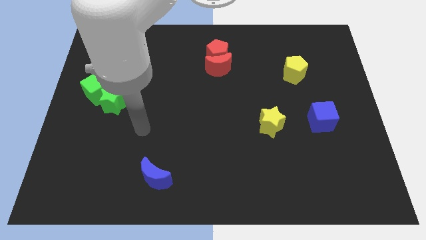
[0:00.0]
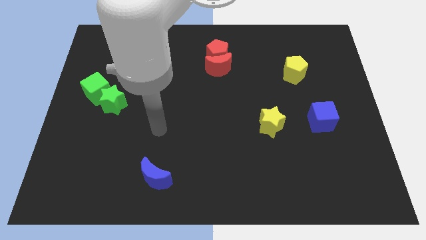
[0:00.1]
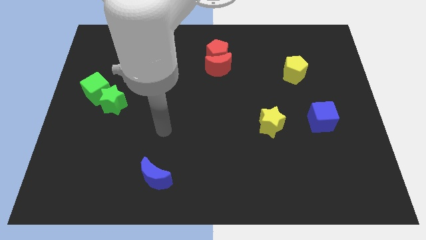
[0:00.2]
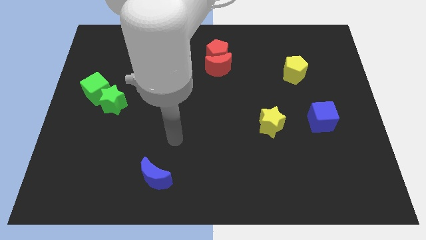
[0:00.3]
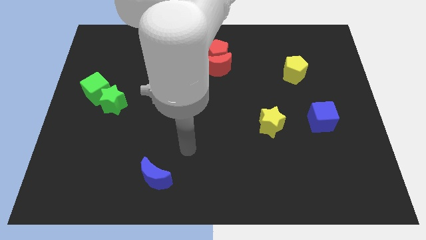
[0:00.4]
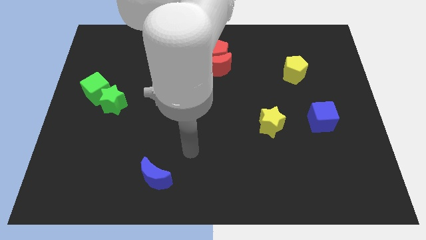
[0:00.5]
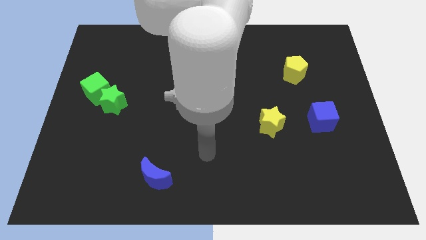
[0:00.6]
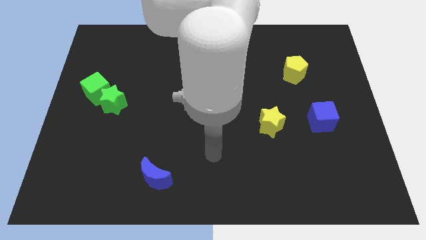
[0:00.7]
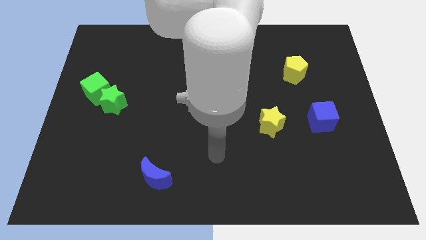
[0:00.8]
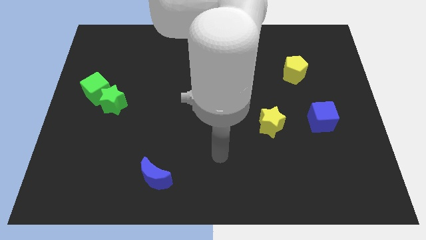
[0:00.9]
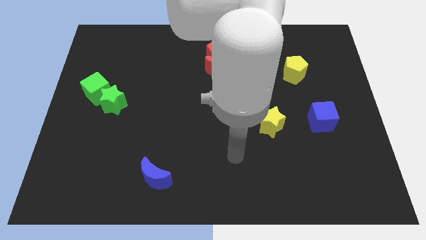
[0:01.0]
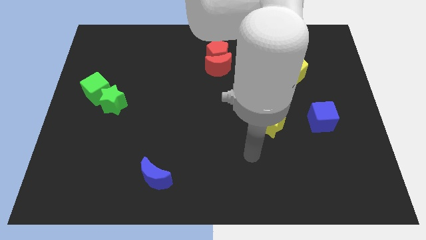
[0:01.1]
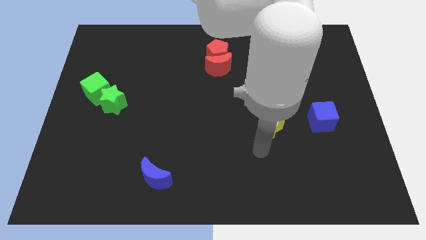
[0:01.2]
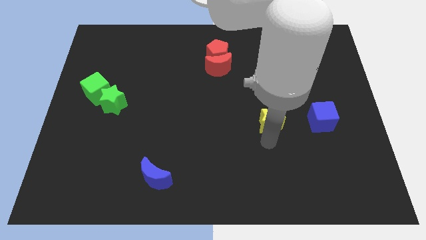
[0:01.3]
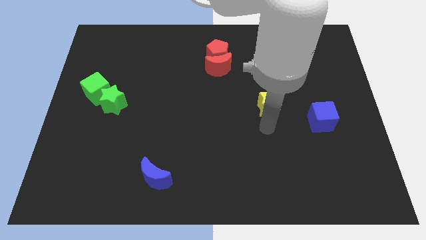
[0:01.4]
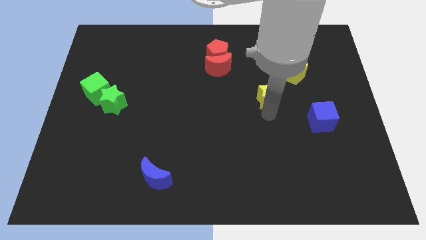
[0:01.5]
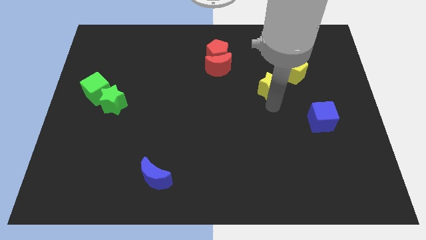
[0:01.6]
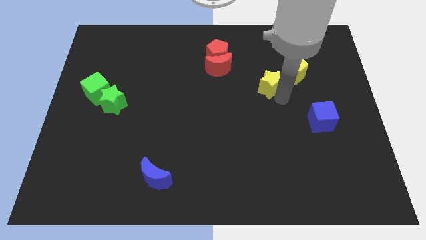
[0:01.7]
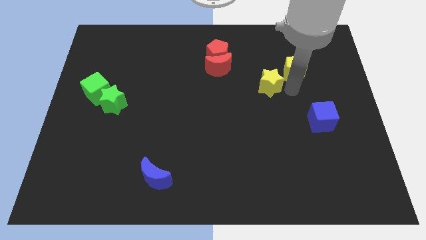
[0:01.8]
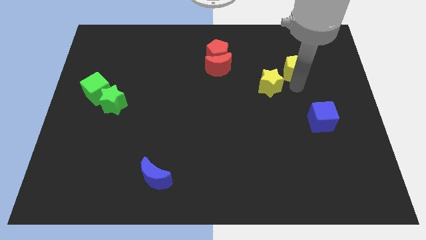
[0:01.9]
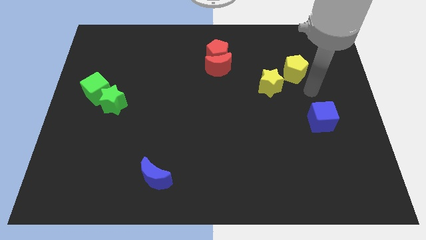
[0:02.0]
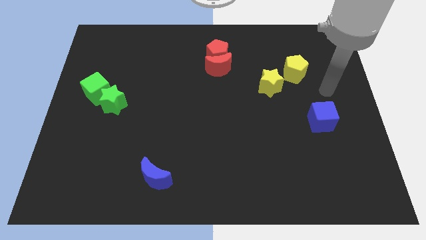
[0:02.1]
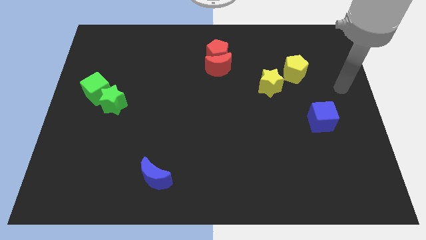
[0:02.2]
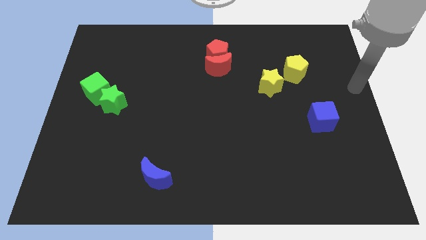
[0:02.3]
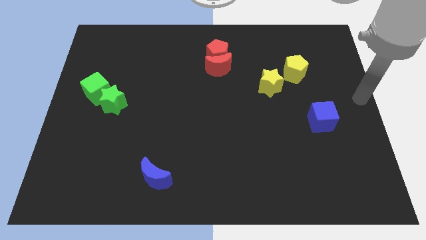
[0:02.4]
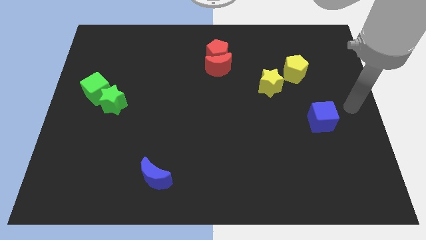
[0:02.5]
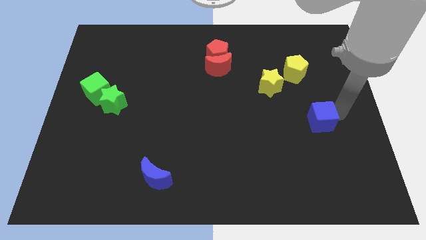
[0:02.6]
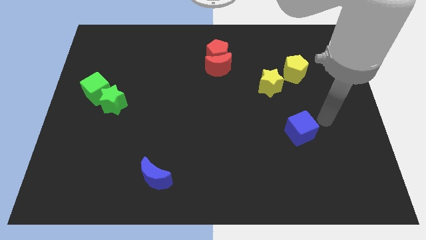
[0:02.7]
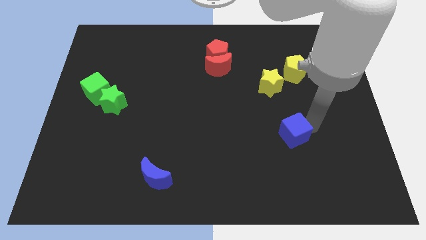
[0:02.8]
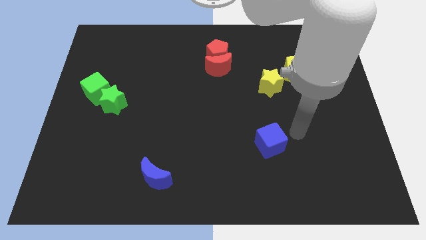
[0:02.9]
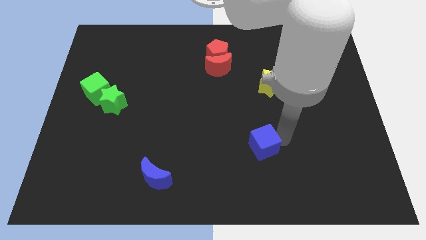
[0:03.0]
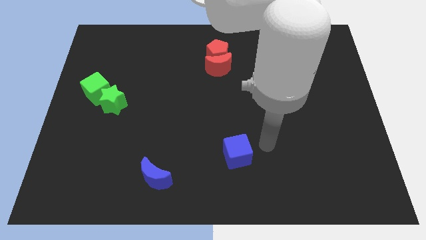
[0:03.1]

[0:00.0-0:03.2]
push the yellow star to the bottom left of yellow pentagon

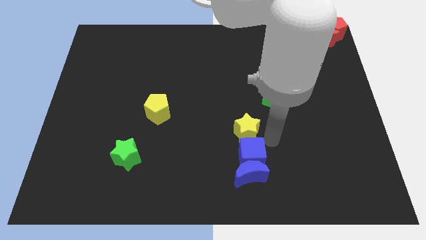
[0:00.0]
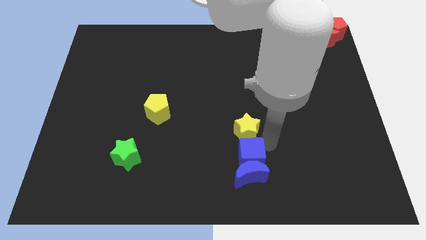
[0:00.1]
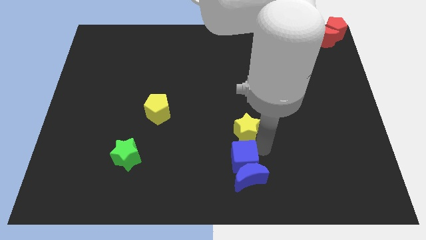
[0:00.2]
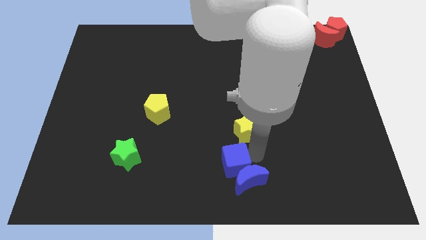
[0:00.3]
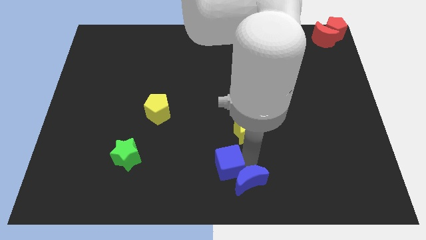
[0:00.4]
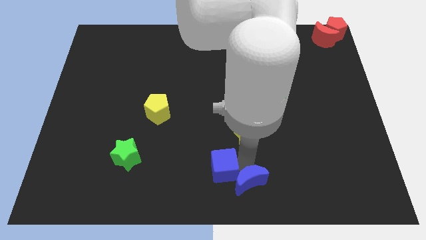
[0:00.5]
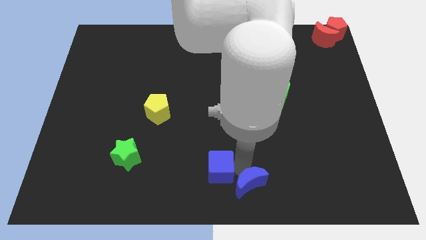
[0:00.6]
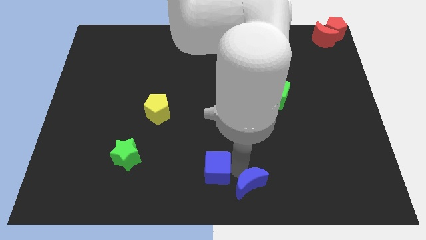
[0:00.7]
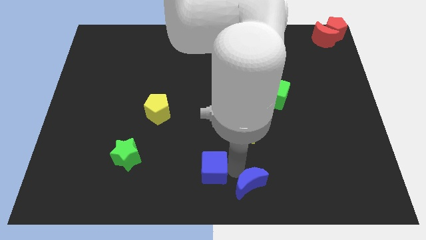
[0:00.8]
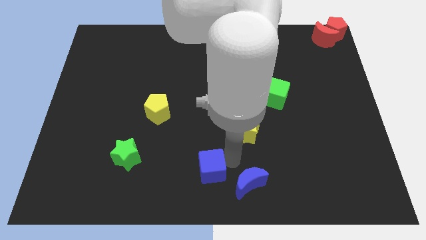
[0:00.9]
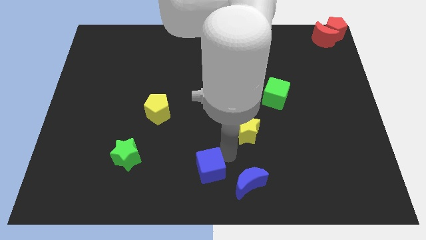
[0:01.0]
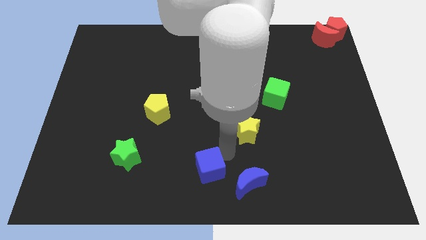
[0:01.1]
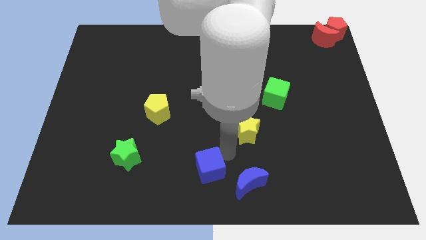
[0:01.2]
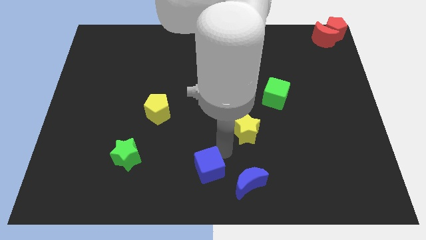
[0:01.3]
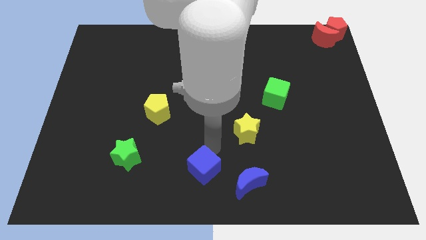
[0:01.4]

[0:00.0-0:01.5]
separate the blue blocks

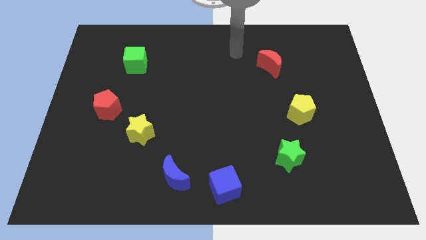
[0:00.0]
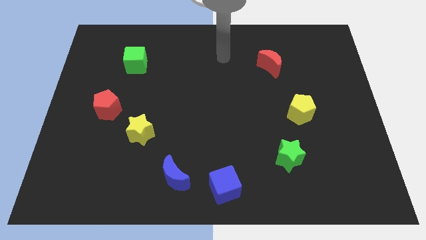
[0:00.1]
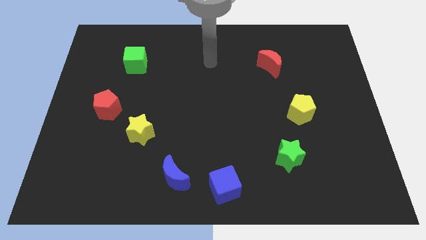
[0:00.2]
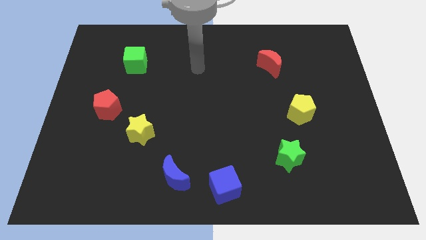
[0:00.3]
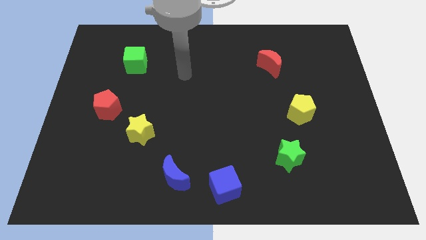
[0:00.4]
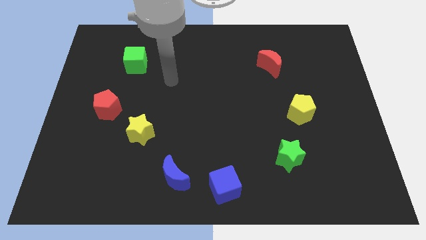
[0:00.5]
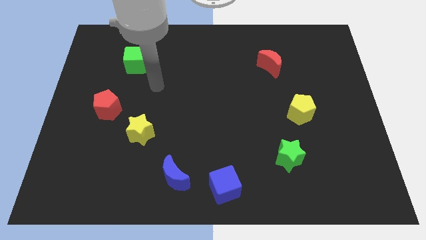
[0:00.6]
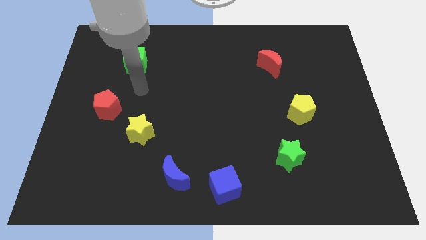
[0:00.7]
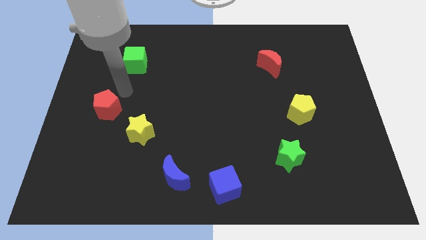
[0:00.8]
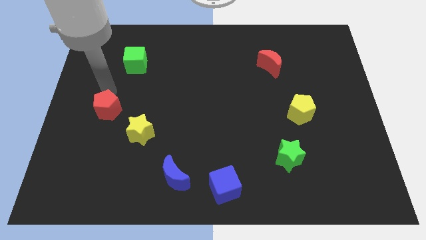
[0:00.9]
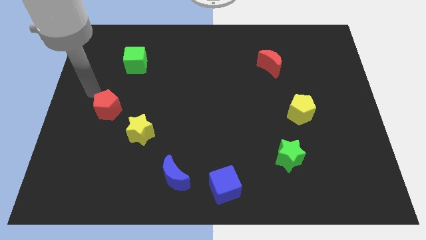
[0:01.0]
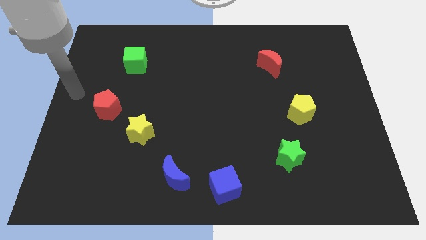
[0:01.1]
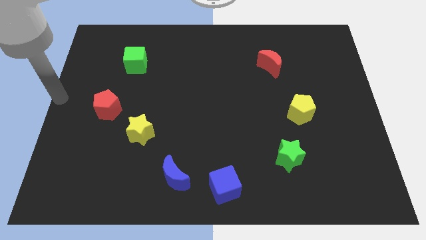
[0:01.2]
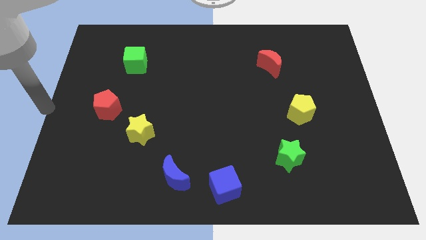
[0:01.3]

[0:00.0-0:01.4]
move your arm to the left center of the board

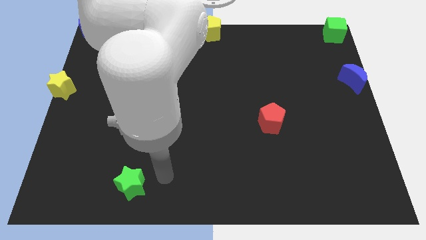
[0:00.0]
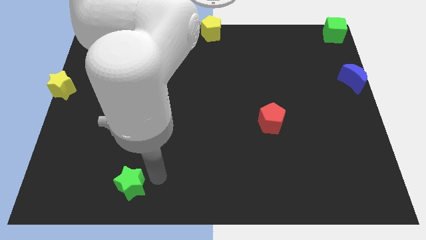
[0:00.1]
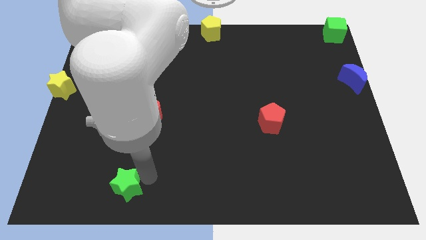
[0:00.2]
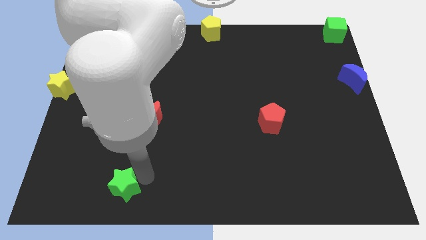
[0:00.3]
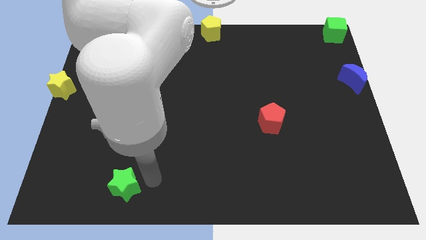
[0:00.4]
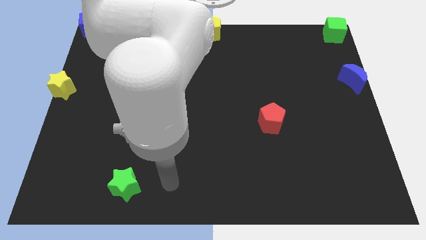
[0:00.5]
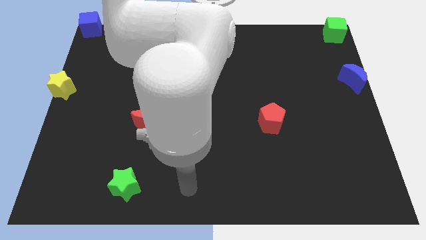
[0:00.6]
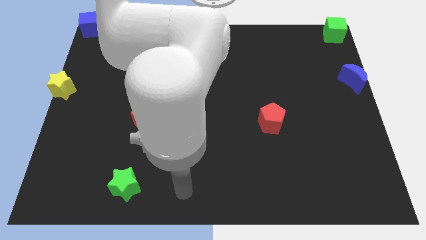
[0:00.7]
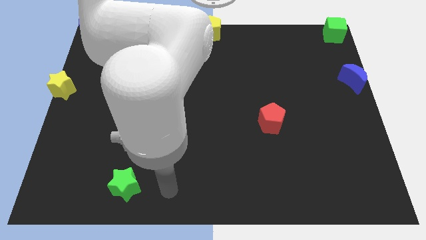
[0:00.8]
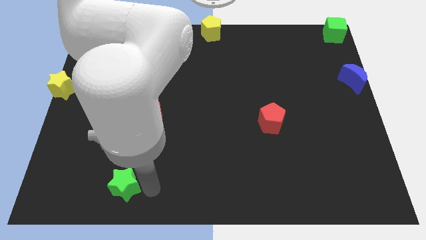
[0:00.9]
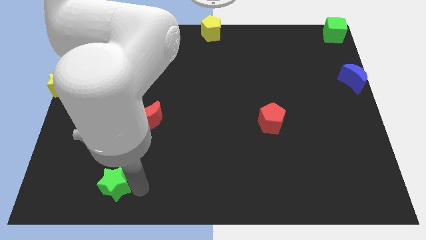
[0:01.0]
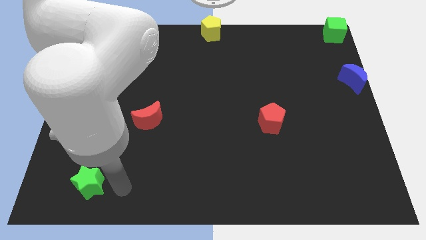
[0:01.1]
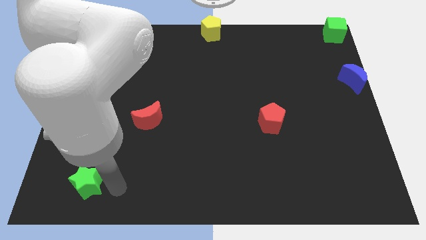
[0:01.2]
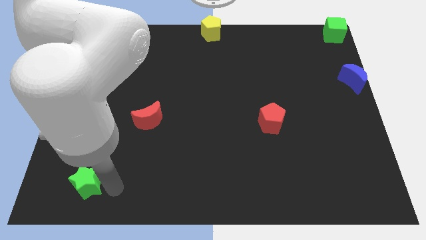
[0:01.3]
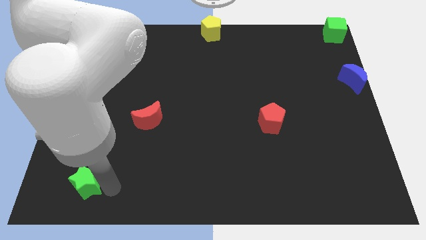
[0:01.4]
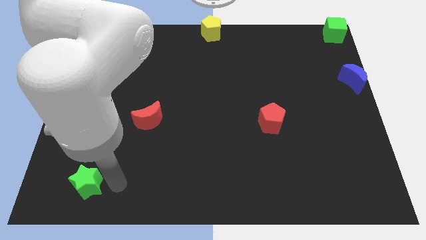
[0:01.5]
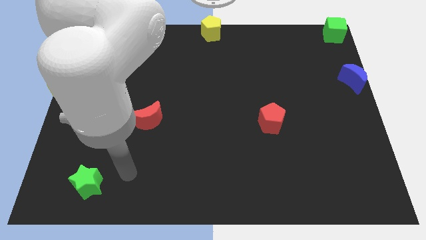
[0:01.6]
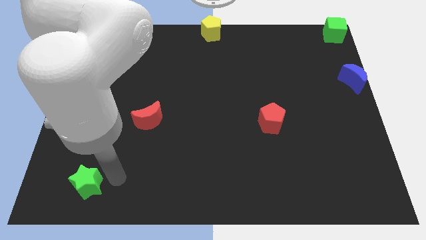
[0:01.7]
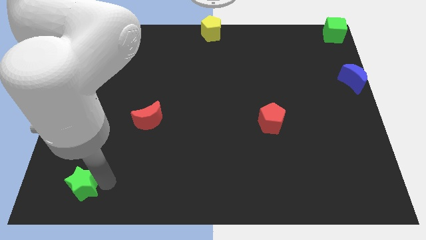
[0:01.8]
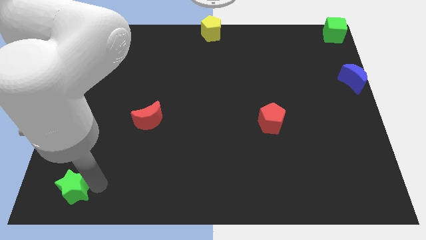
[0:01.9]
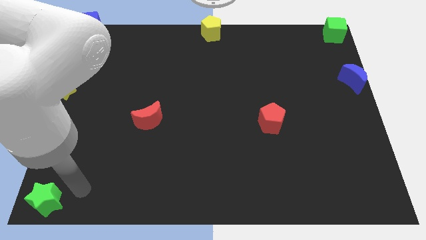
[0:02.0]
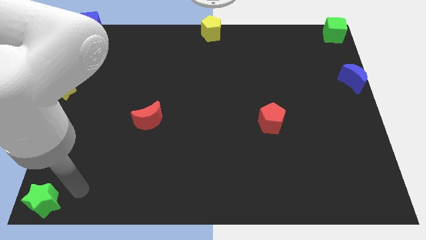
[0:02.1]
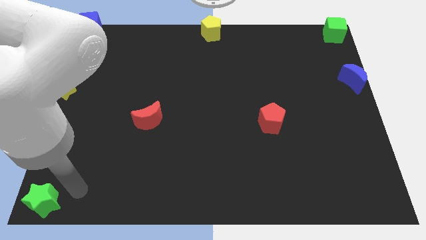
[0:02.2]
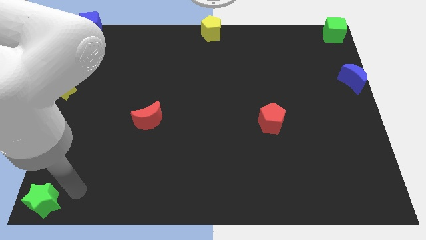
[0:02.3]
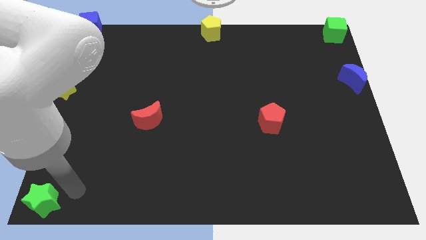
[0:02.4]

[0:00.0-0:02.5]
push the green star to the bottom left corner of the board

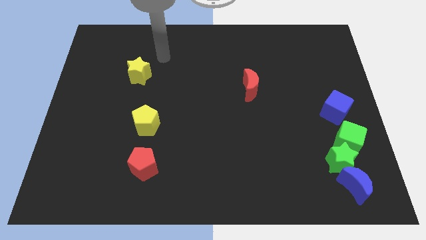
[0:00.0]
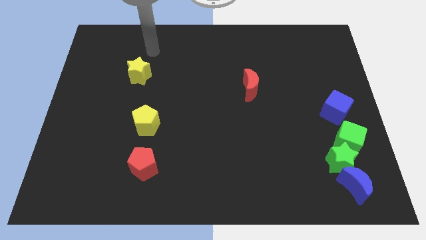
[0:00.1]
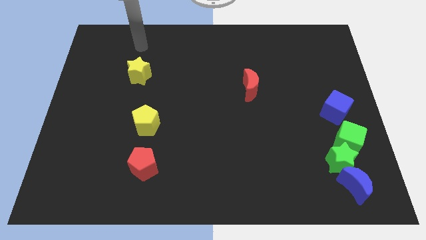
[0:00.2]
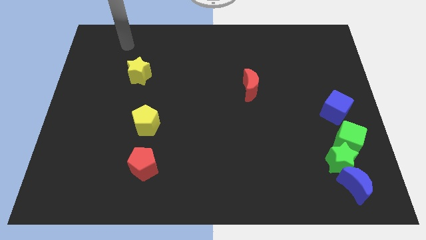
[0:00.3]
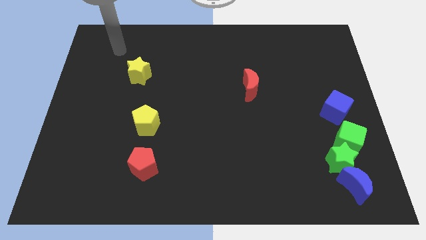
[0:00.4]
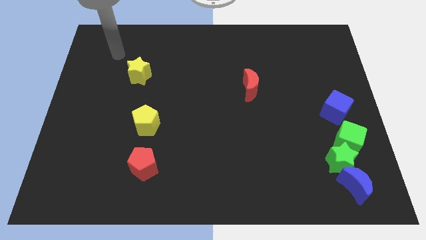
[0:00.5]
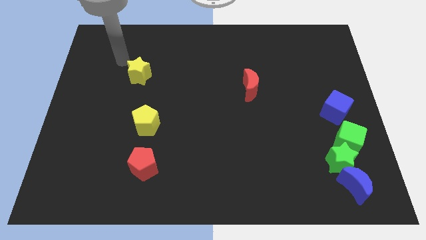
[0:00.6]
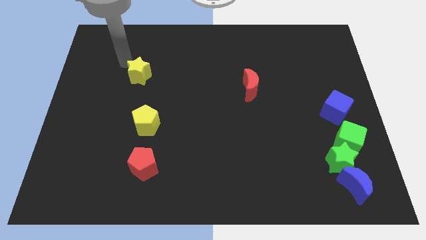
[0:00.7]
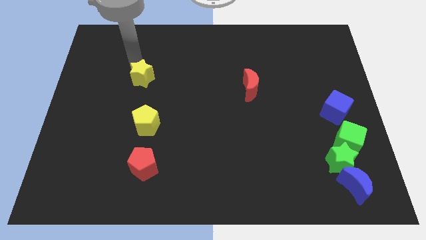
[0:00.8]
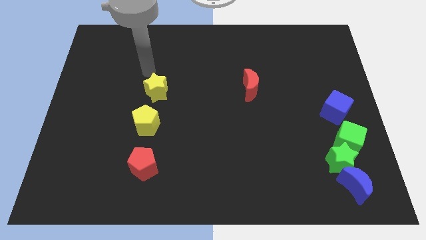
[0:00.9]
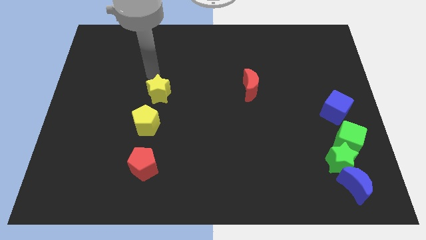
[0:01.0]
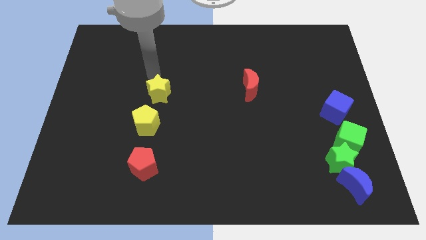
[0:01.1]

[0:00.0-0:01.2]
move yellow star towards the top of yellow pentagon
